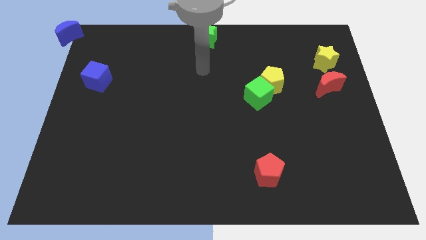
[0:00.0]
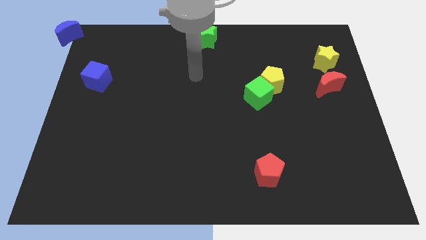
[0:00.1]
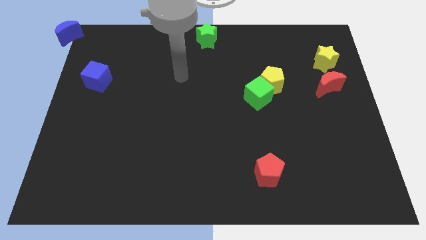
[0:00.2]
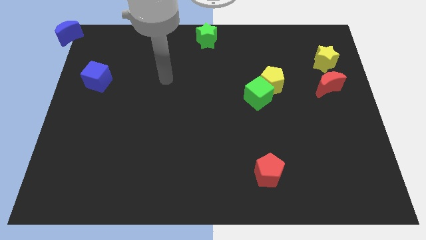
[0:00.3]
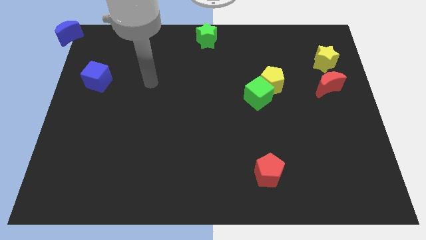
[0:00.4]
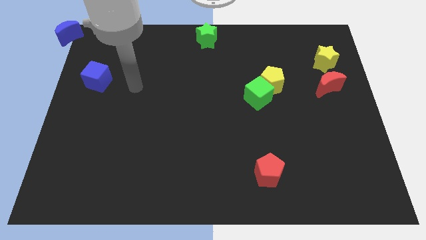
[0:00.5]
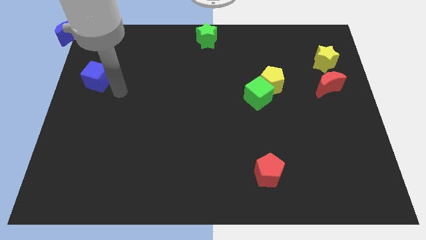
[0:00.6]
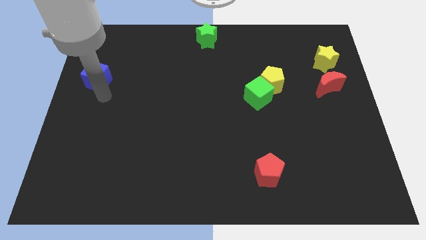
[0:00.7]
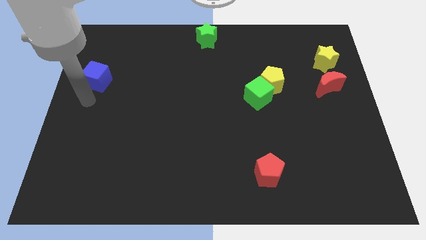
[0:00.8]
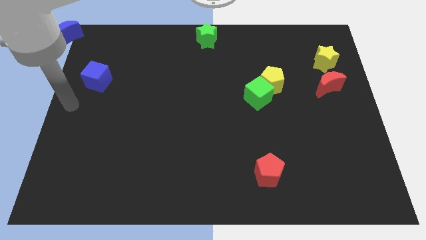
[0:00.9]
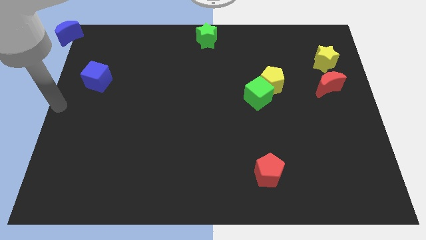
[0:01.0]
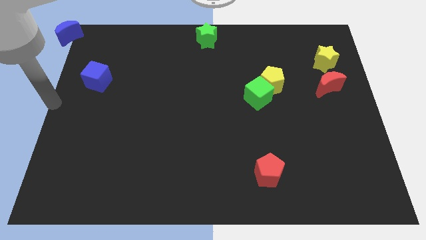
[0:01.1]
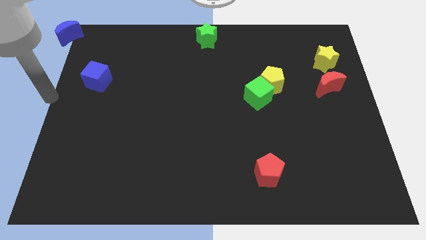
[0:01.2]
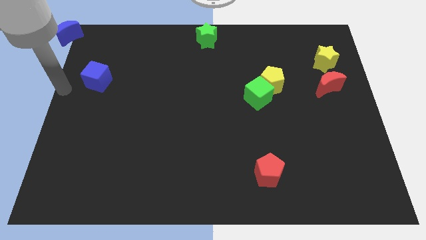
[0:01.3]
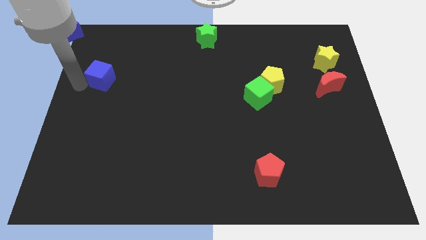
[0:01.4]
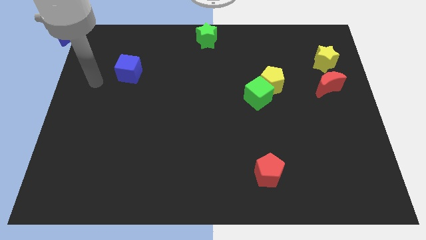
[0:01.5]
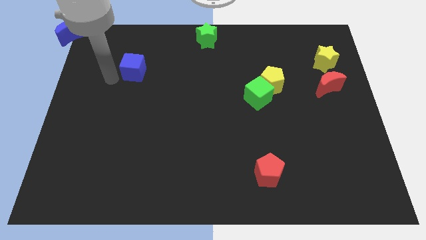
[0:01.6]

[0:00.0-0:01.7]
slide the blue cube diagonally on the bottom right side of the blue crescent

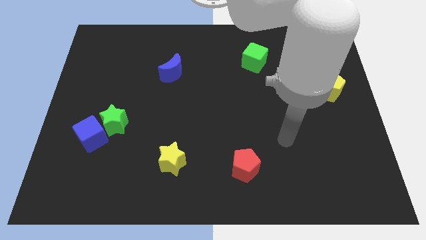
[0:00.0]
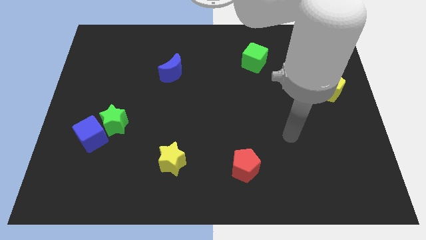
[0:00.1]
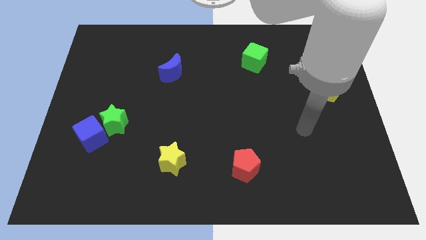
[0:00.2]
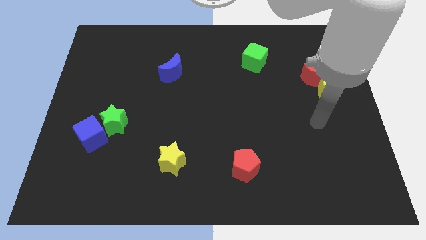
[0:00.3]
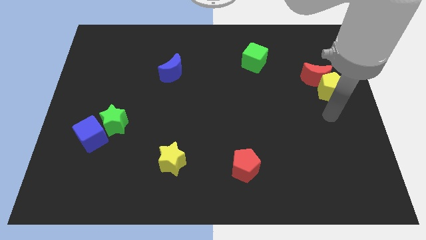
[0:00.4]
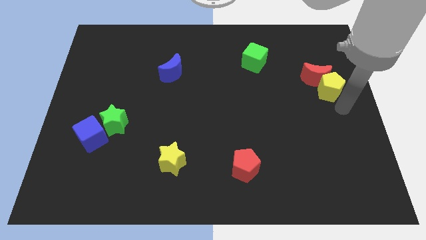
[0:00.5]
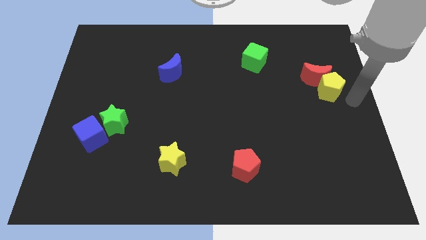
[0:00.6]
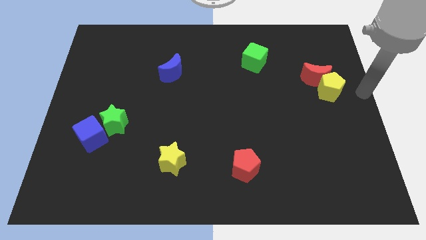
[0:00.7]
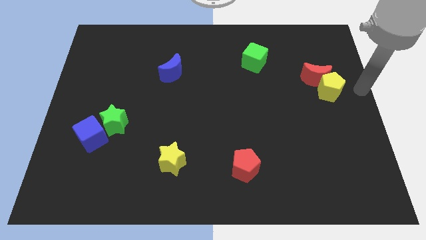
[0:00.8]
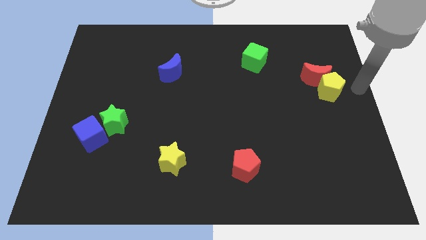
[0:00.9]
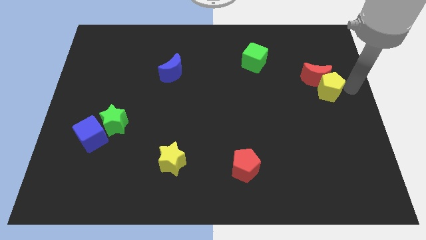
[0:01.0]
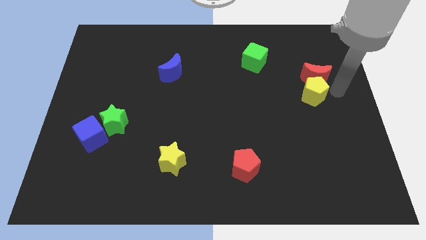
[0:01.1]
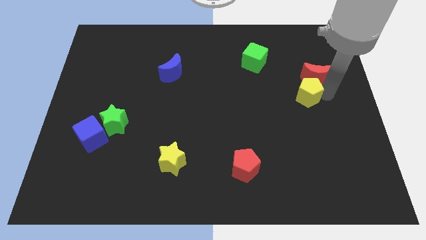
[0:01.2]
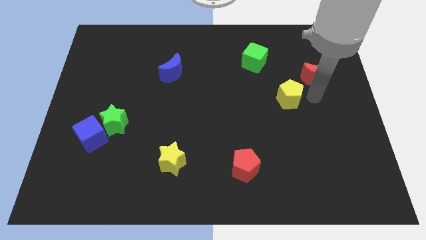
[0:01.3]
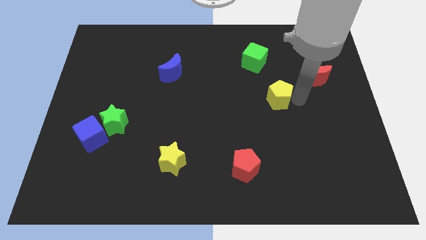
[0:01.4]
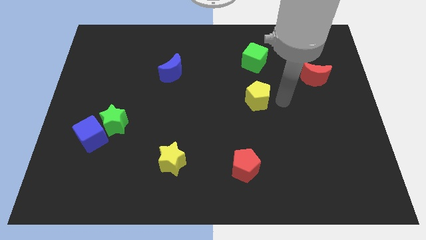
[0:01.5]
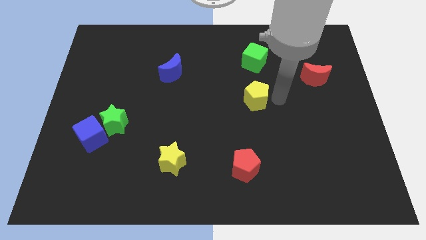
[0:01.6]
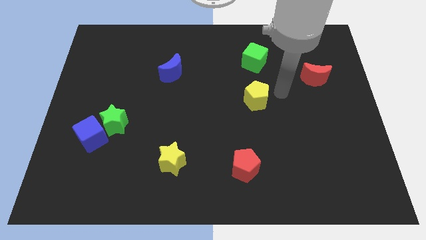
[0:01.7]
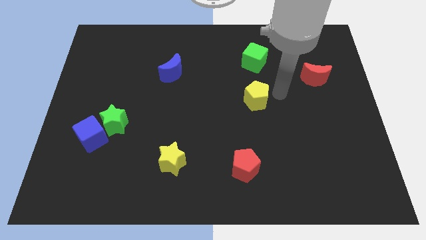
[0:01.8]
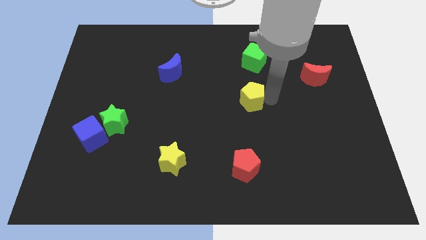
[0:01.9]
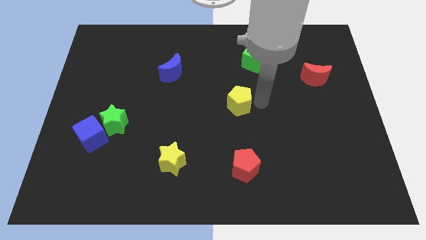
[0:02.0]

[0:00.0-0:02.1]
put the yellow pentagon below the green cube

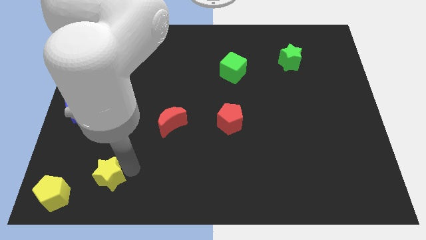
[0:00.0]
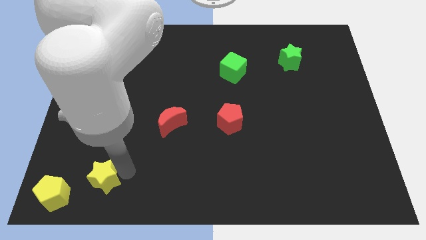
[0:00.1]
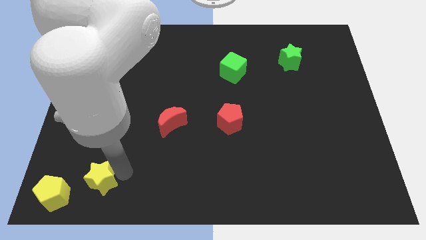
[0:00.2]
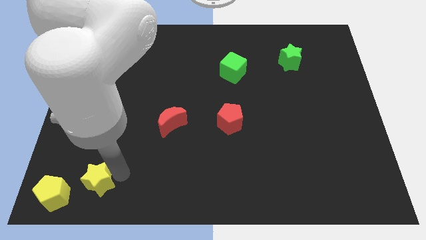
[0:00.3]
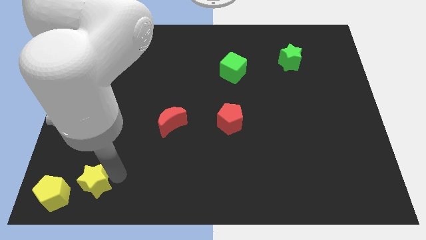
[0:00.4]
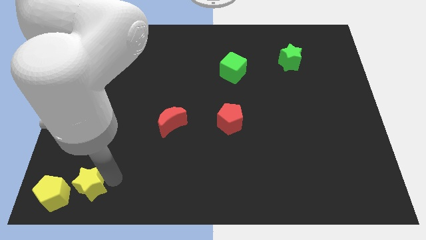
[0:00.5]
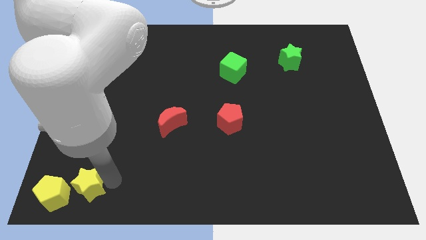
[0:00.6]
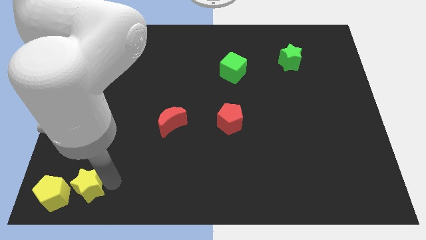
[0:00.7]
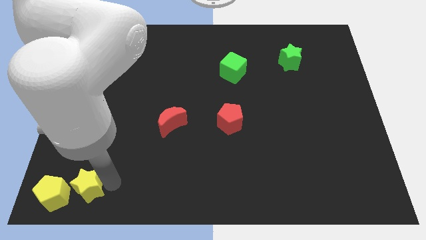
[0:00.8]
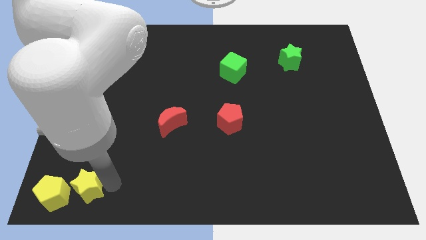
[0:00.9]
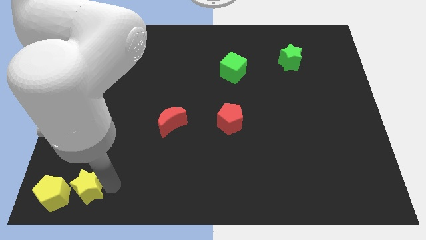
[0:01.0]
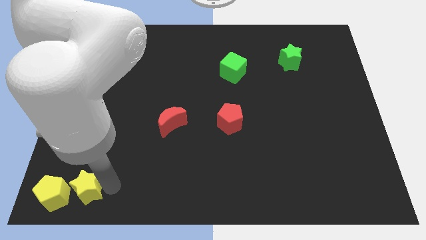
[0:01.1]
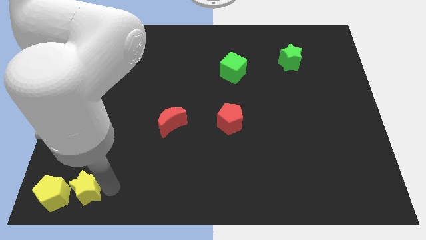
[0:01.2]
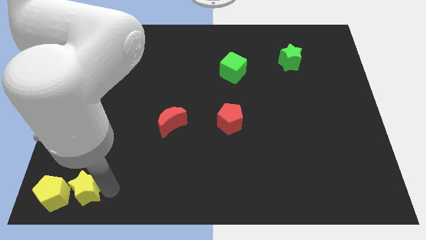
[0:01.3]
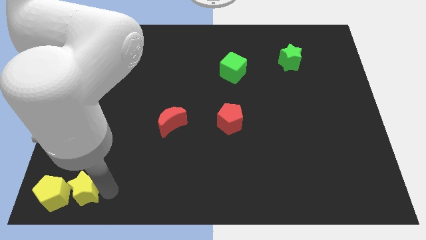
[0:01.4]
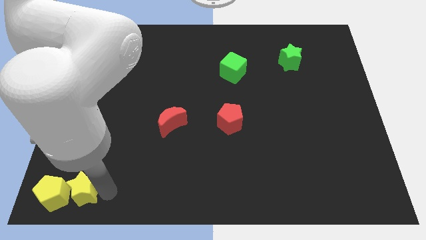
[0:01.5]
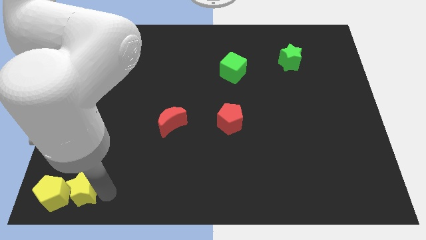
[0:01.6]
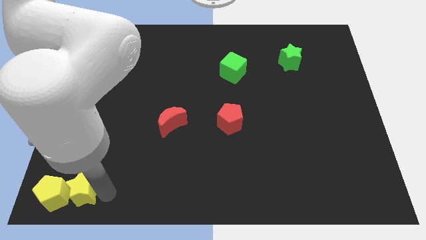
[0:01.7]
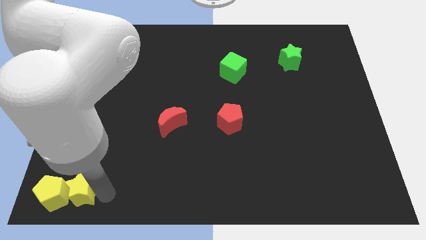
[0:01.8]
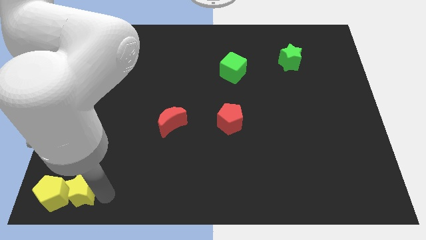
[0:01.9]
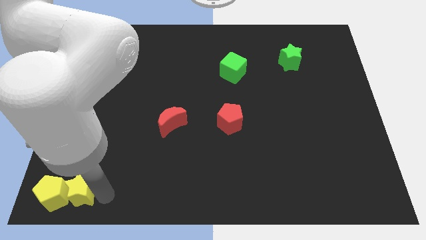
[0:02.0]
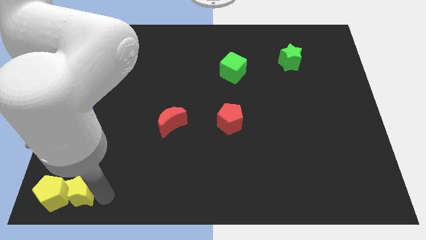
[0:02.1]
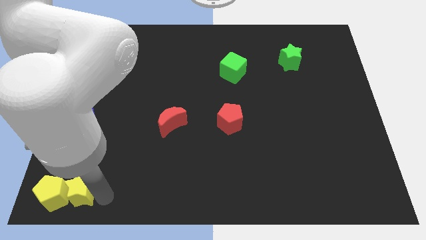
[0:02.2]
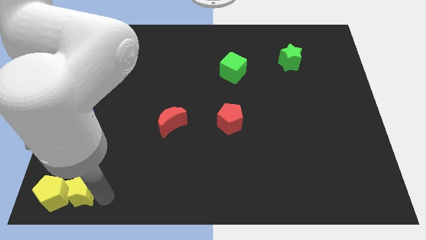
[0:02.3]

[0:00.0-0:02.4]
place the yellow star to the right of the yellow pentagon

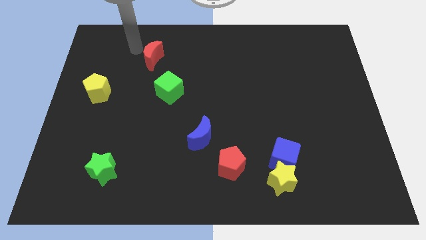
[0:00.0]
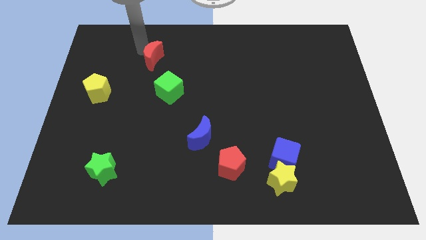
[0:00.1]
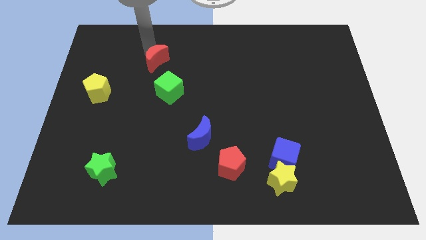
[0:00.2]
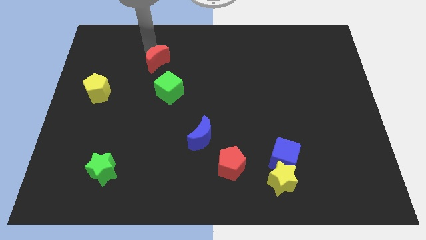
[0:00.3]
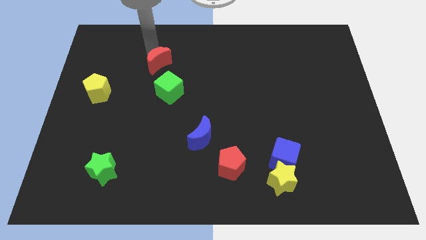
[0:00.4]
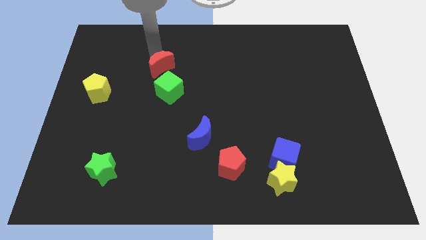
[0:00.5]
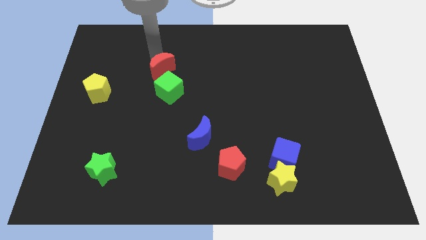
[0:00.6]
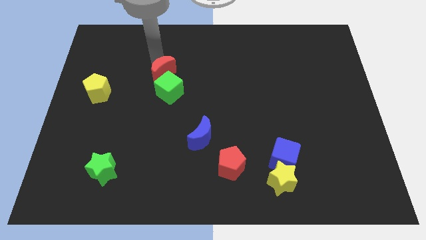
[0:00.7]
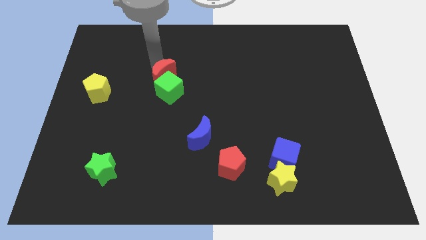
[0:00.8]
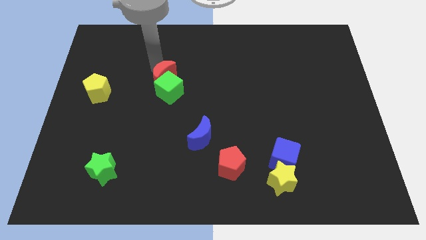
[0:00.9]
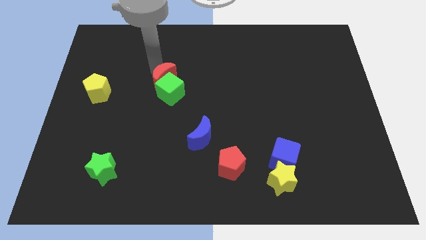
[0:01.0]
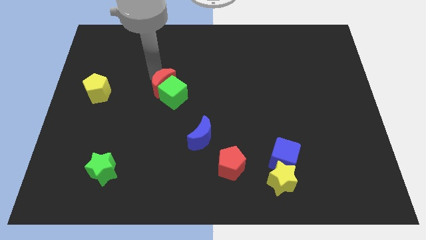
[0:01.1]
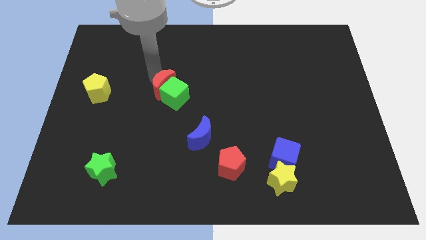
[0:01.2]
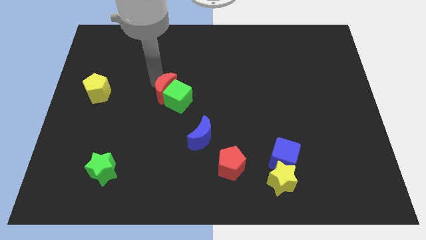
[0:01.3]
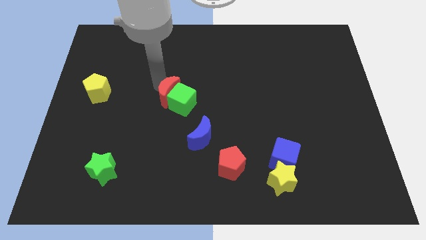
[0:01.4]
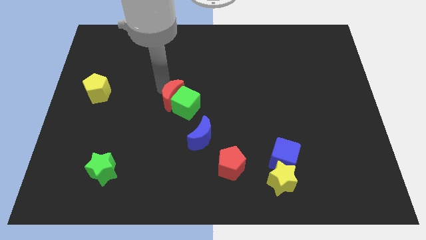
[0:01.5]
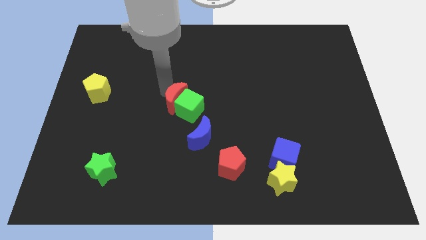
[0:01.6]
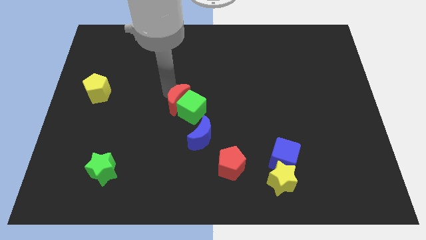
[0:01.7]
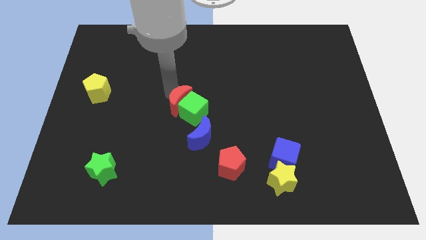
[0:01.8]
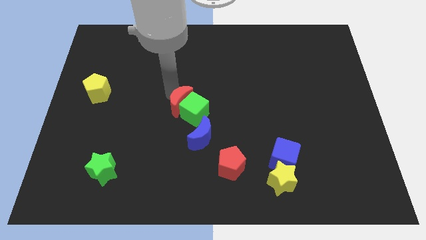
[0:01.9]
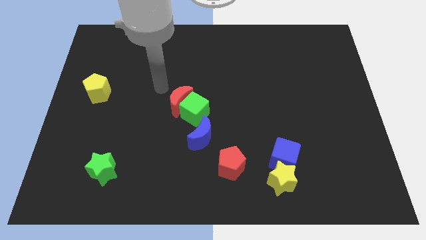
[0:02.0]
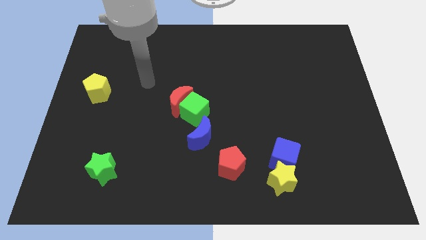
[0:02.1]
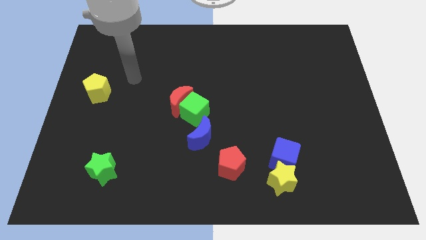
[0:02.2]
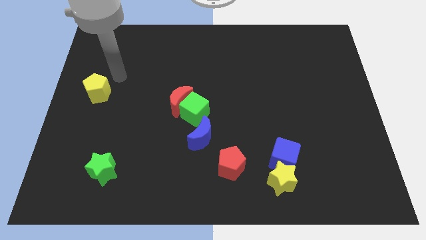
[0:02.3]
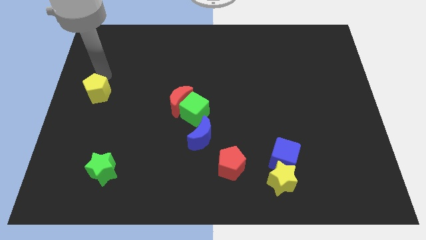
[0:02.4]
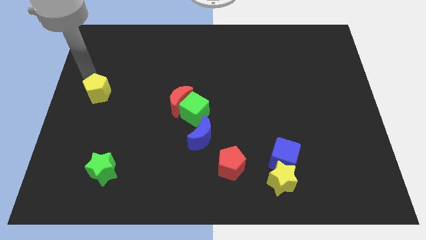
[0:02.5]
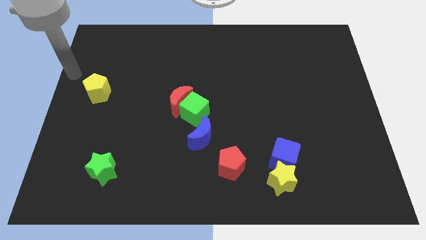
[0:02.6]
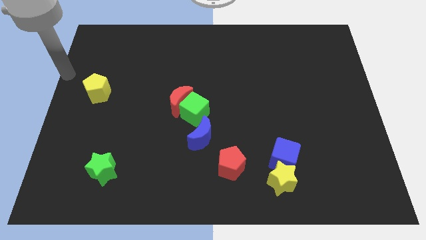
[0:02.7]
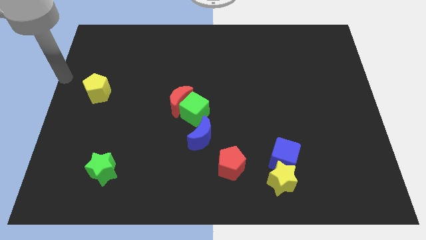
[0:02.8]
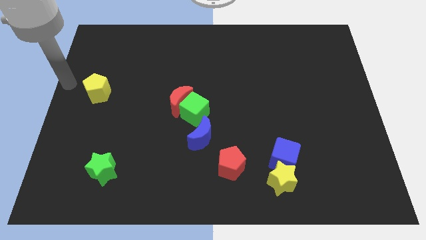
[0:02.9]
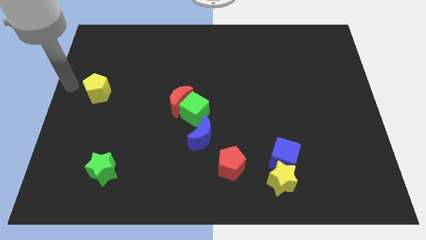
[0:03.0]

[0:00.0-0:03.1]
push red moon along with green cube towards center
